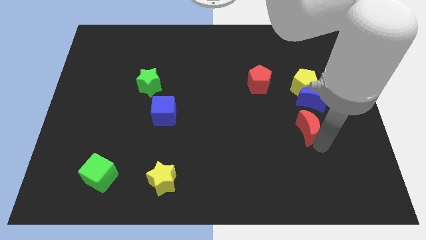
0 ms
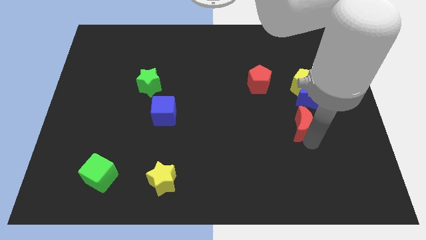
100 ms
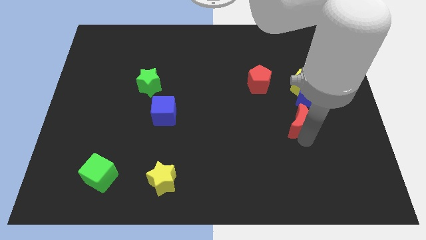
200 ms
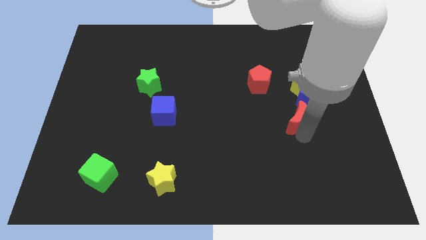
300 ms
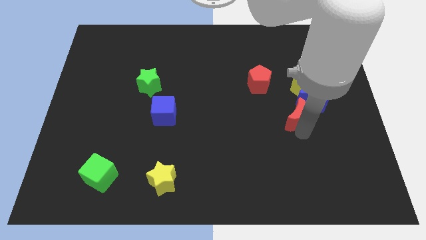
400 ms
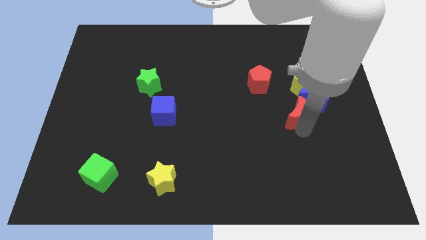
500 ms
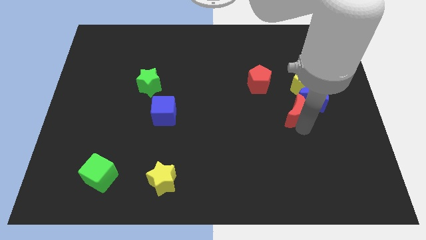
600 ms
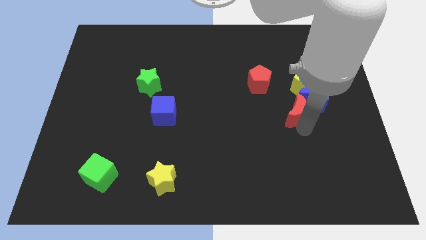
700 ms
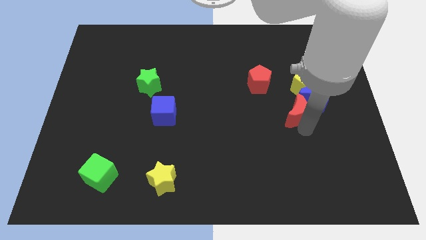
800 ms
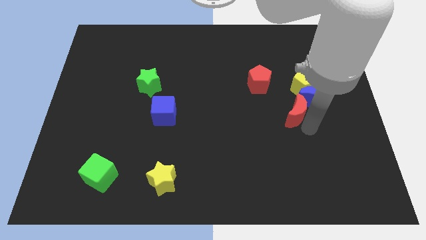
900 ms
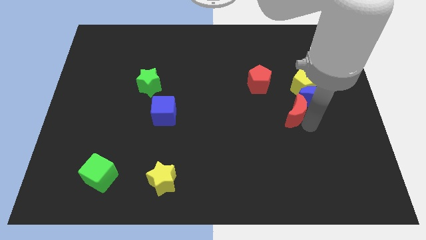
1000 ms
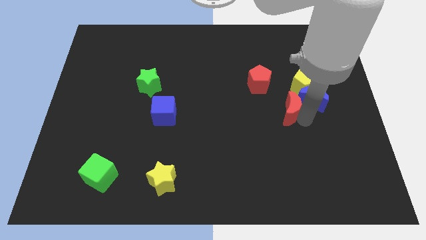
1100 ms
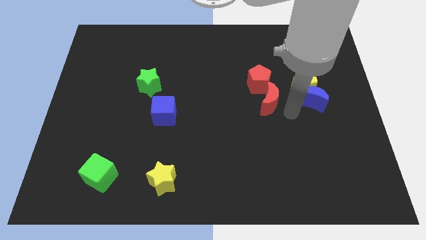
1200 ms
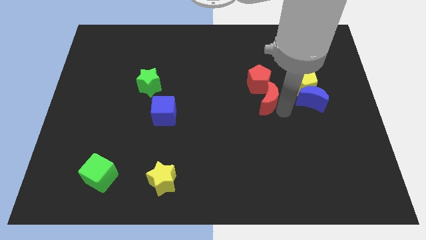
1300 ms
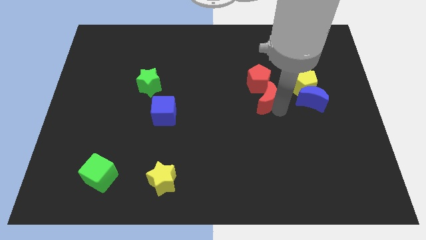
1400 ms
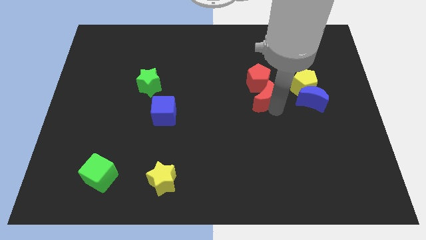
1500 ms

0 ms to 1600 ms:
place the red moon left to the blue moon

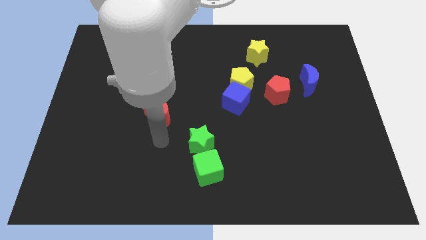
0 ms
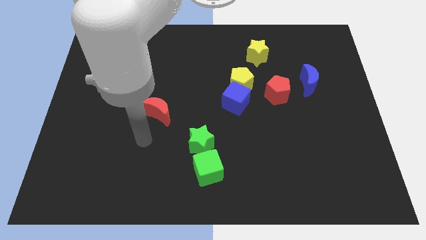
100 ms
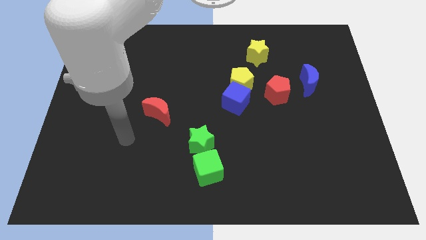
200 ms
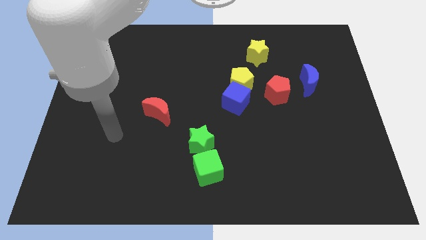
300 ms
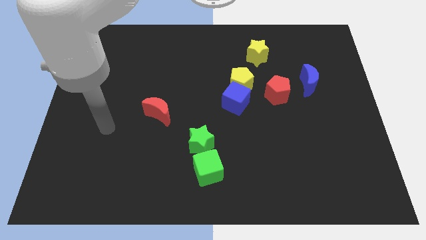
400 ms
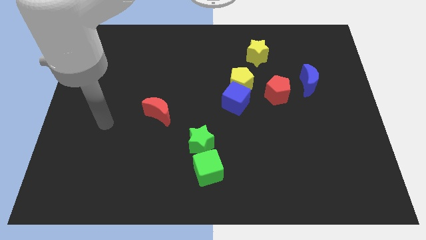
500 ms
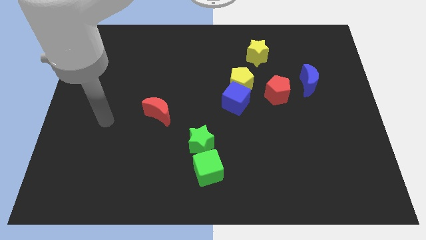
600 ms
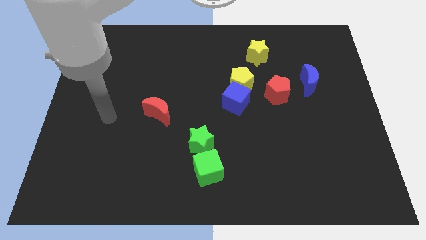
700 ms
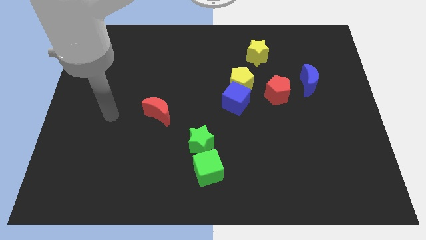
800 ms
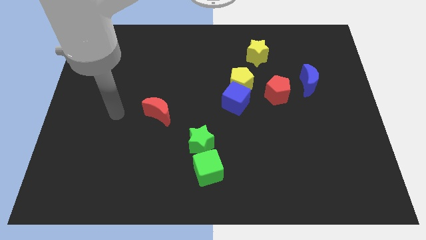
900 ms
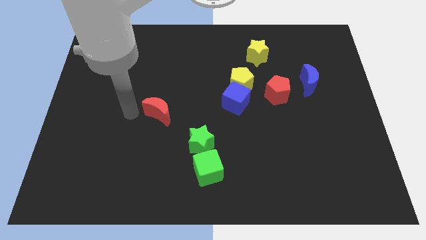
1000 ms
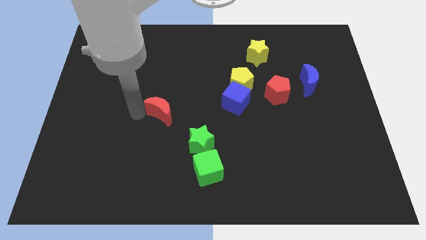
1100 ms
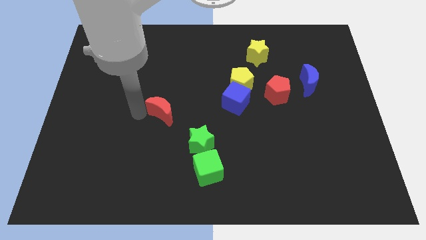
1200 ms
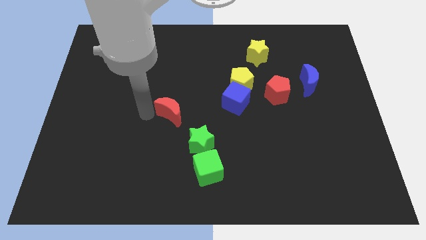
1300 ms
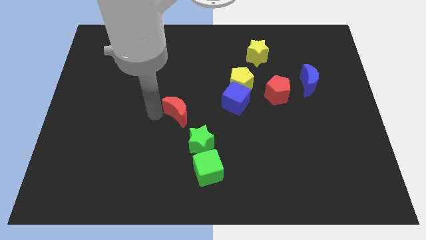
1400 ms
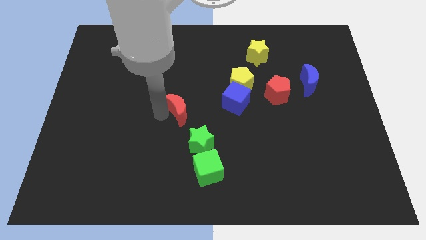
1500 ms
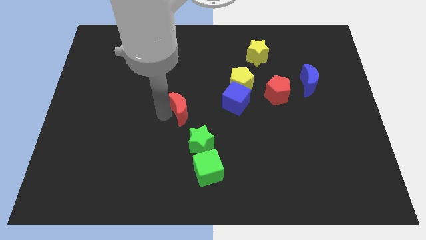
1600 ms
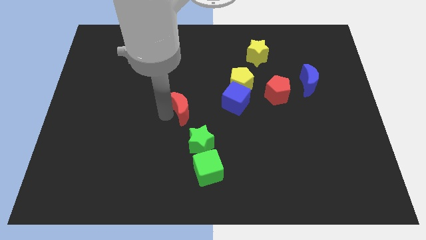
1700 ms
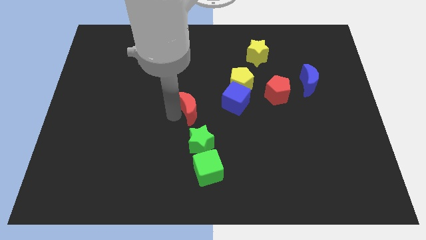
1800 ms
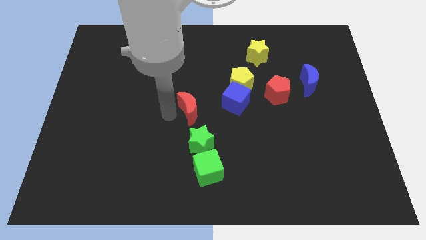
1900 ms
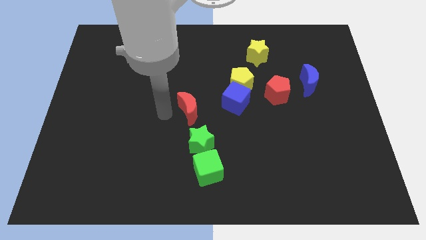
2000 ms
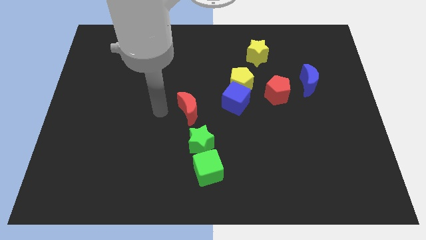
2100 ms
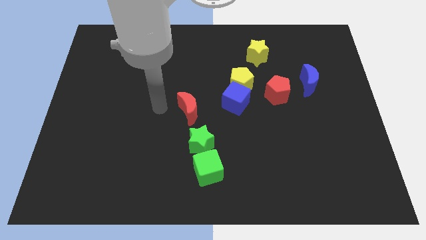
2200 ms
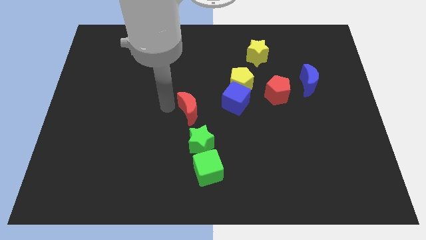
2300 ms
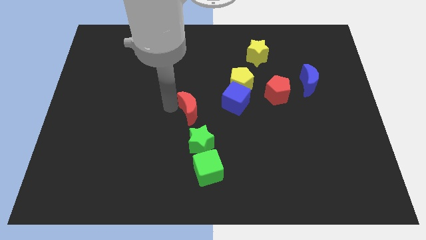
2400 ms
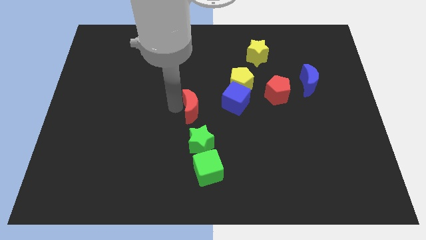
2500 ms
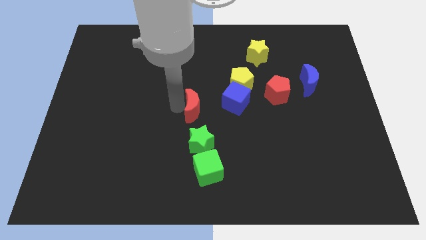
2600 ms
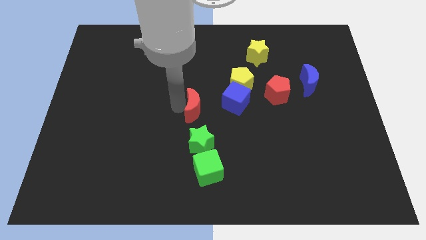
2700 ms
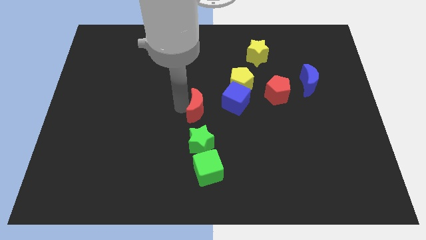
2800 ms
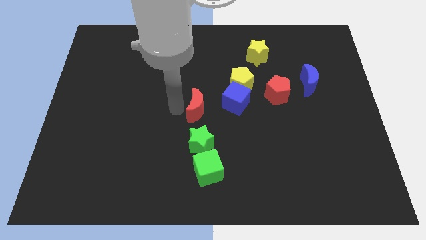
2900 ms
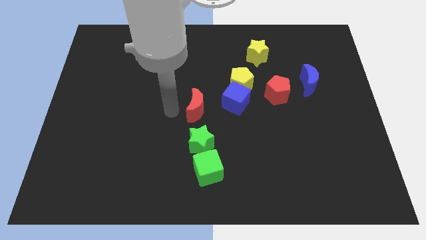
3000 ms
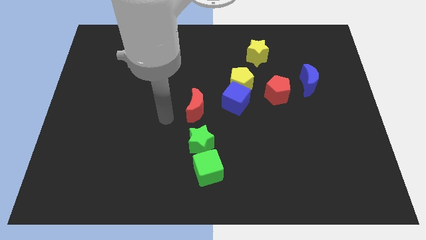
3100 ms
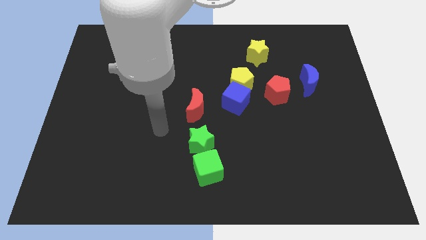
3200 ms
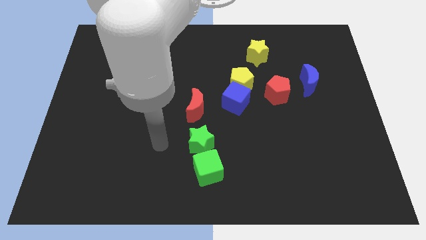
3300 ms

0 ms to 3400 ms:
drag the red moon vertically above the green star

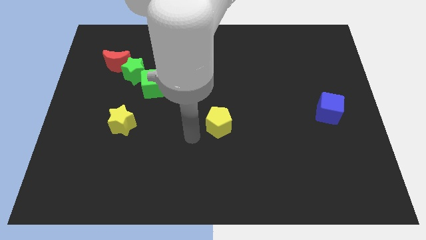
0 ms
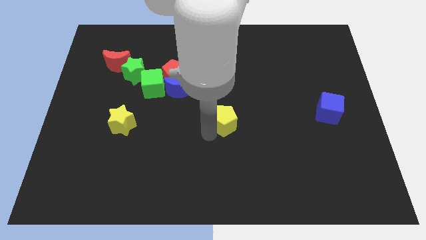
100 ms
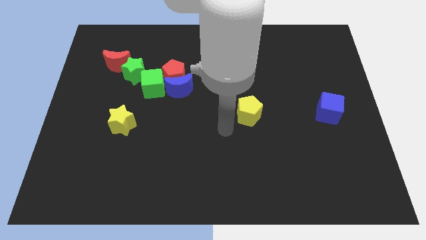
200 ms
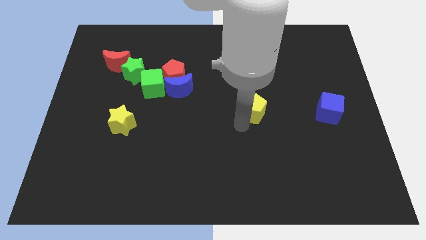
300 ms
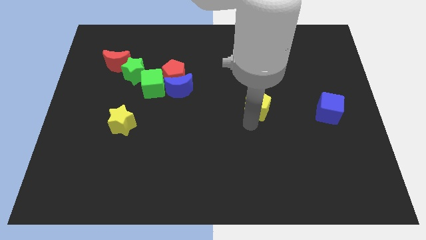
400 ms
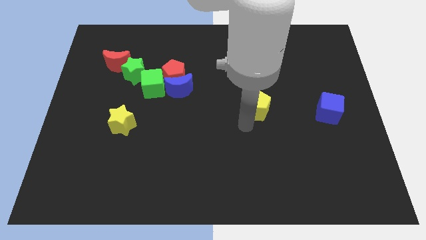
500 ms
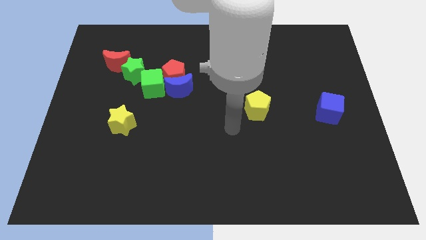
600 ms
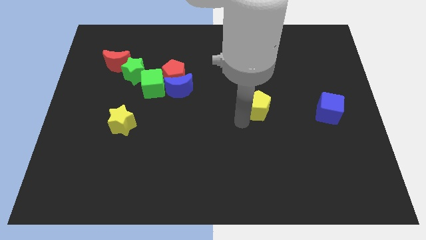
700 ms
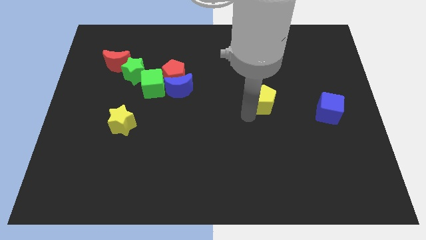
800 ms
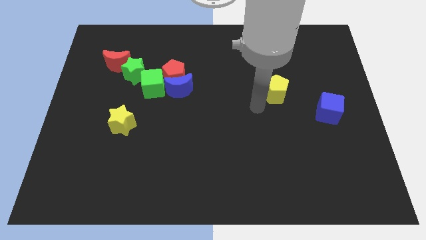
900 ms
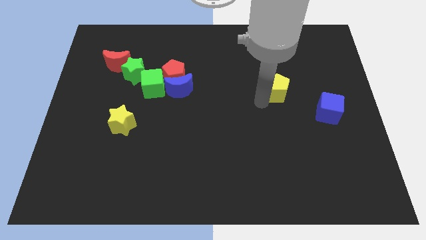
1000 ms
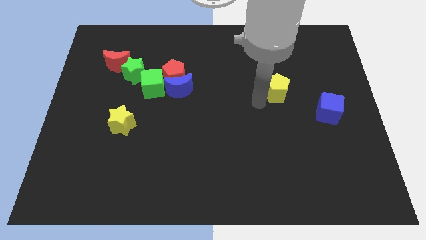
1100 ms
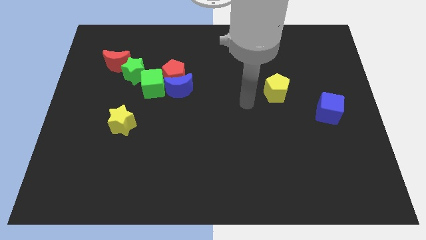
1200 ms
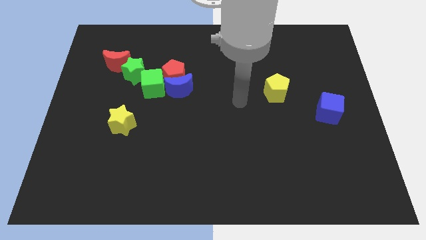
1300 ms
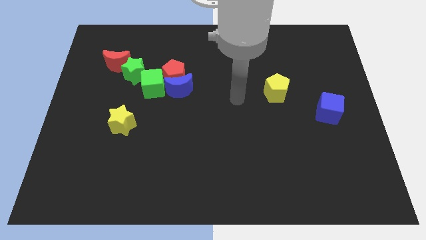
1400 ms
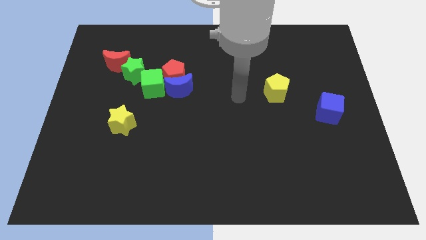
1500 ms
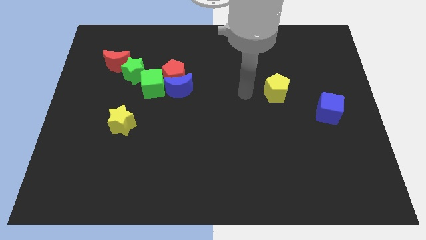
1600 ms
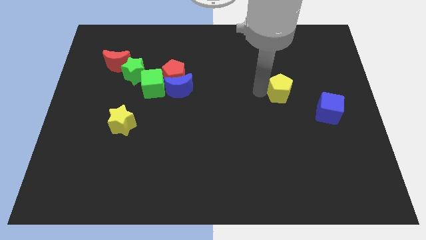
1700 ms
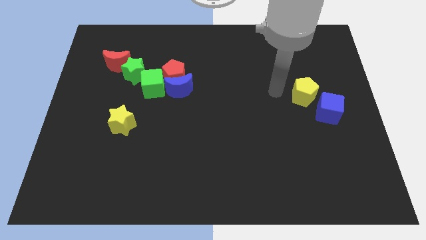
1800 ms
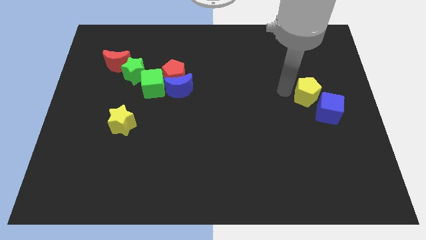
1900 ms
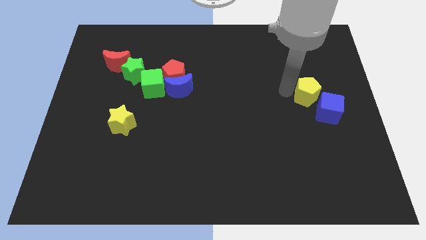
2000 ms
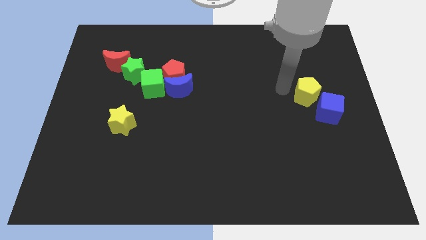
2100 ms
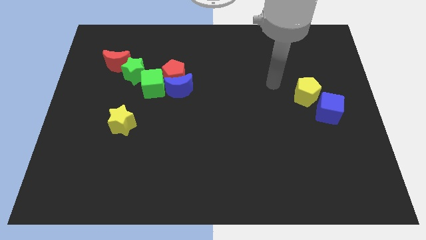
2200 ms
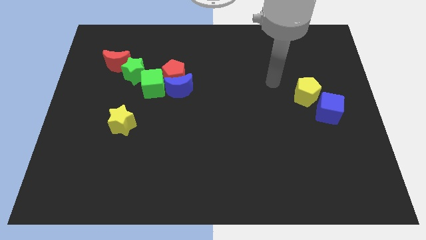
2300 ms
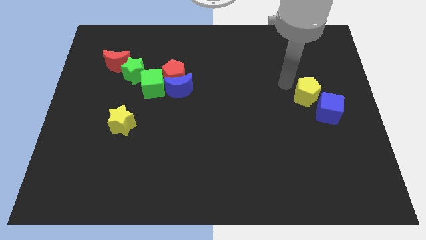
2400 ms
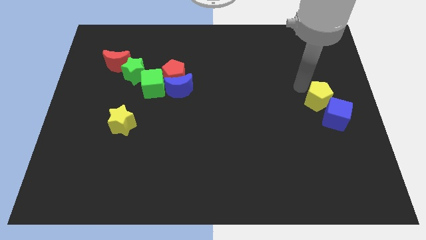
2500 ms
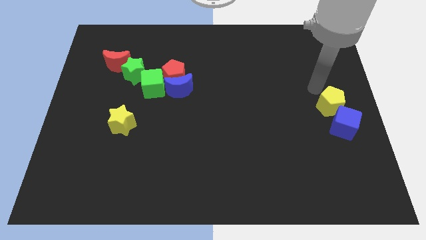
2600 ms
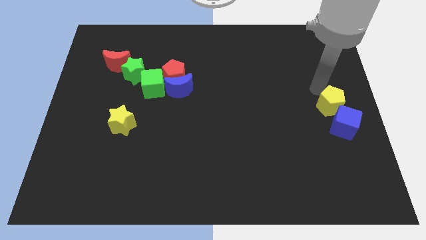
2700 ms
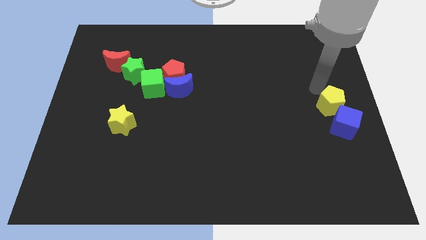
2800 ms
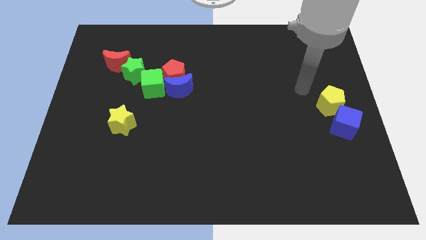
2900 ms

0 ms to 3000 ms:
push yellow pentagon in to blue cube

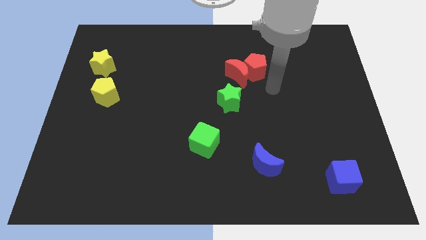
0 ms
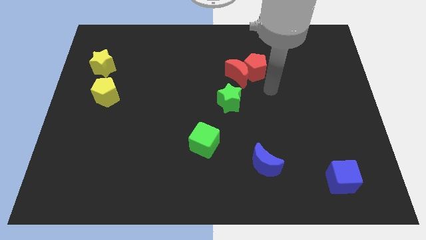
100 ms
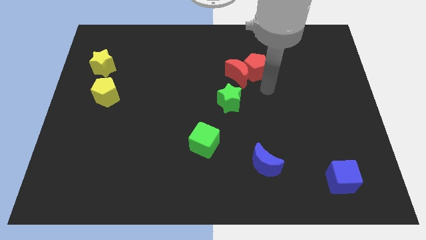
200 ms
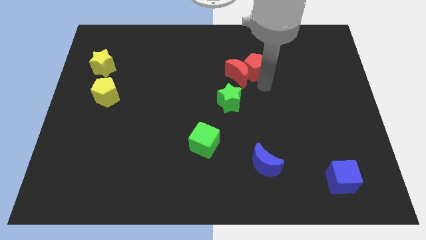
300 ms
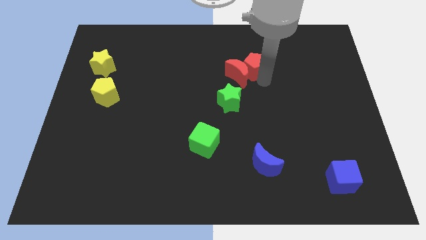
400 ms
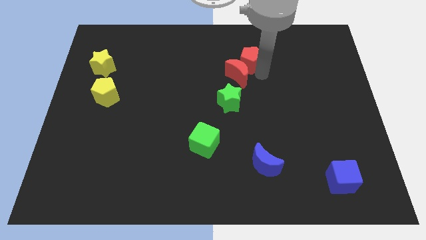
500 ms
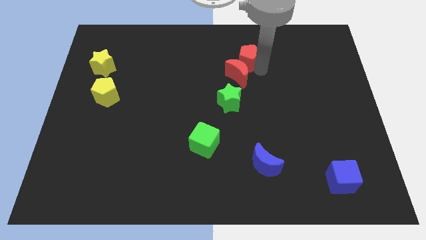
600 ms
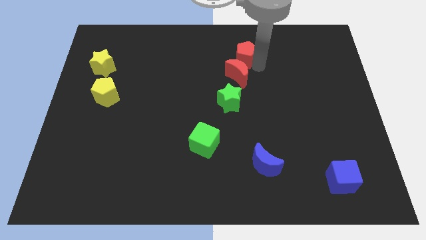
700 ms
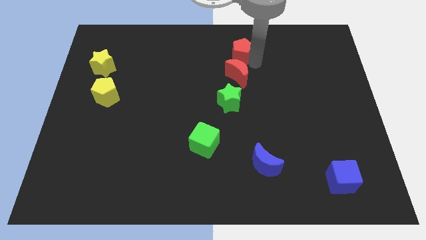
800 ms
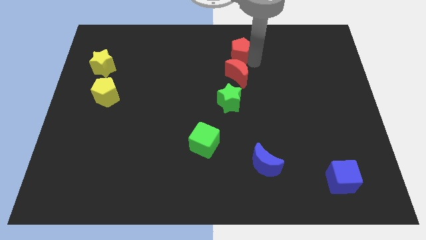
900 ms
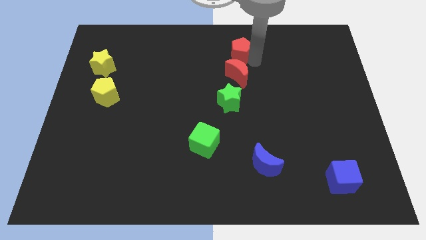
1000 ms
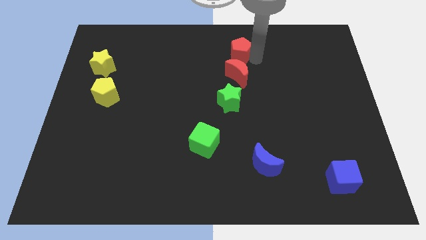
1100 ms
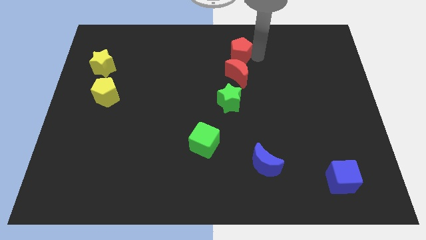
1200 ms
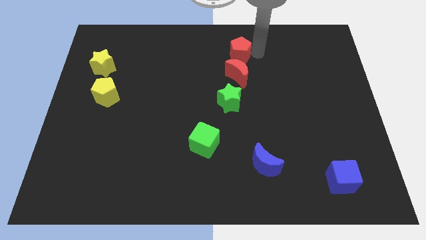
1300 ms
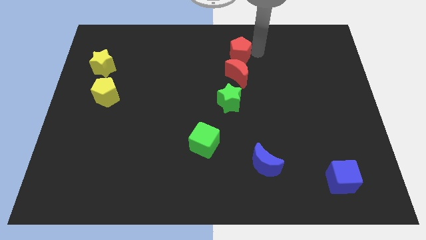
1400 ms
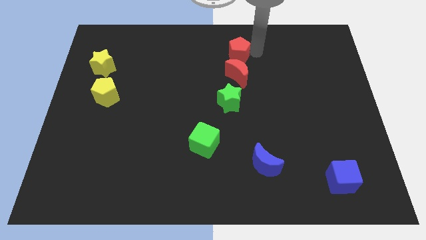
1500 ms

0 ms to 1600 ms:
push the red pentagon to the top side of the red moon
